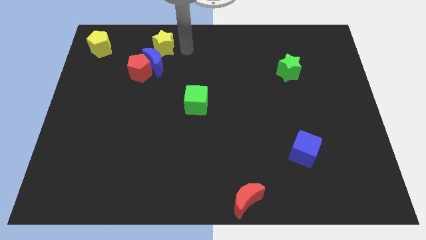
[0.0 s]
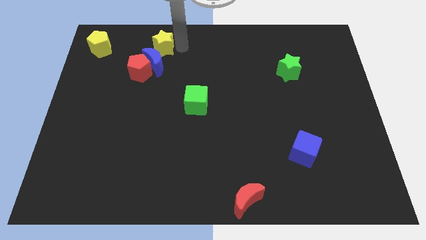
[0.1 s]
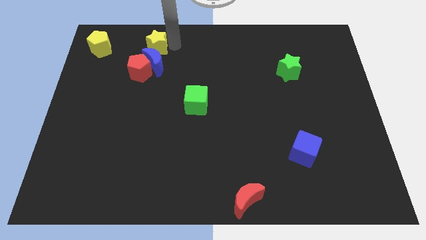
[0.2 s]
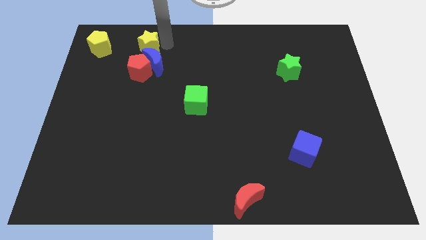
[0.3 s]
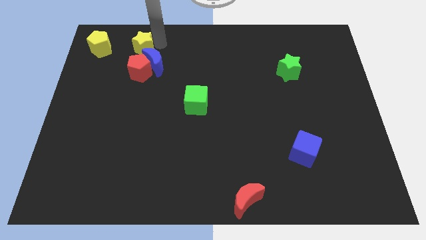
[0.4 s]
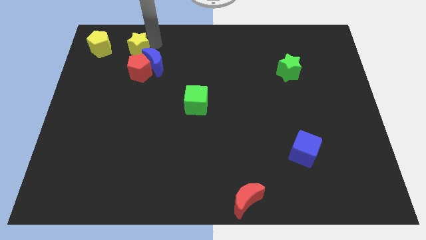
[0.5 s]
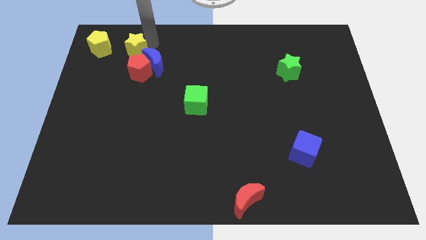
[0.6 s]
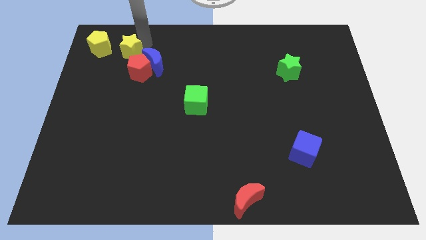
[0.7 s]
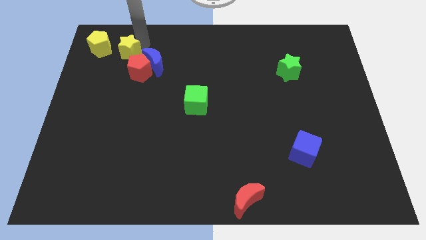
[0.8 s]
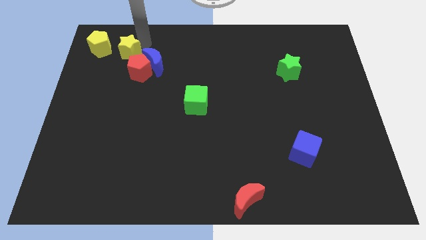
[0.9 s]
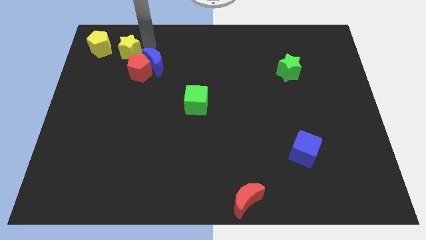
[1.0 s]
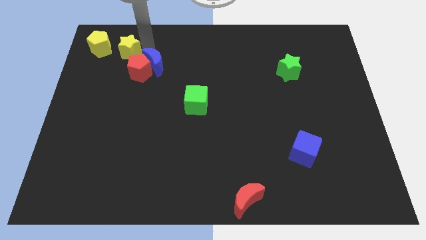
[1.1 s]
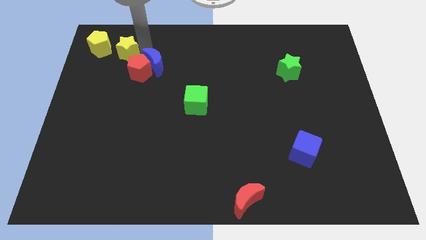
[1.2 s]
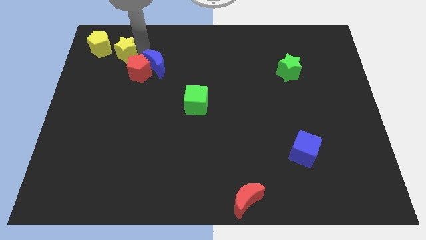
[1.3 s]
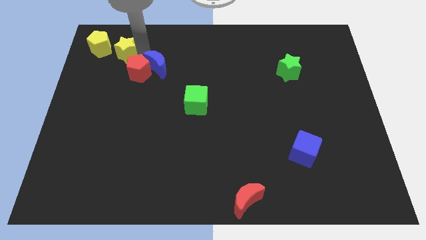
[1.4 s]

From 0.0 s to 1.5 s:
put yellow star between the yellow pentagon and blue moon

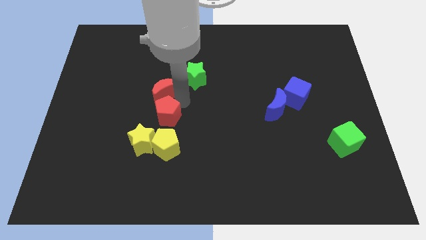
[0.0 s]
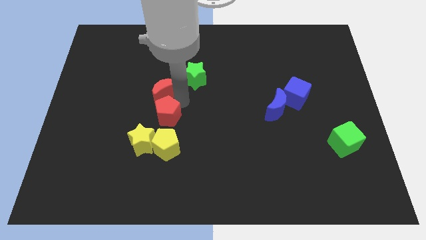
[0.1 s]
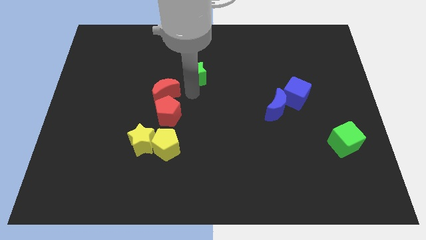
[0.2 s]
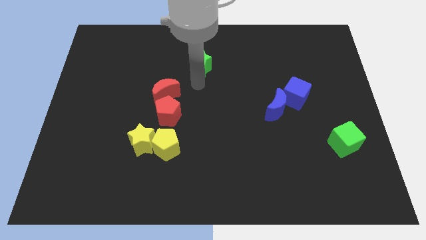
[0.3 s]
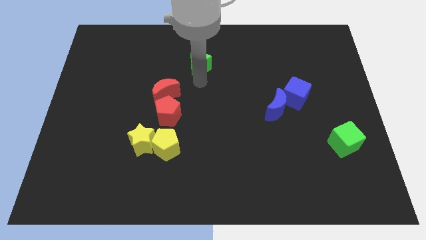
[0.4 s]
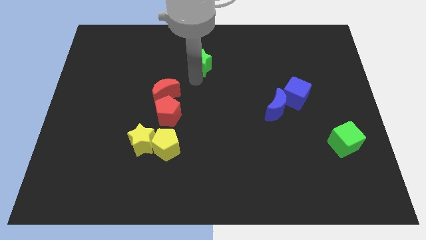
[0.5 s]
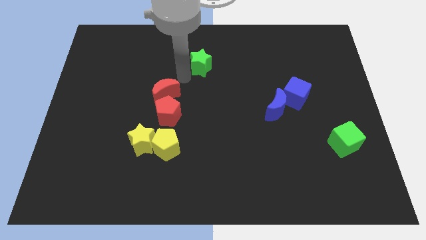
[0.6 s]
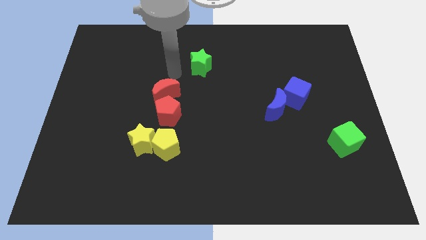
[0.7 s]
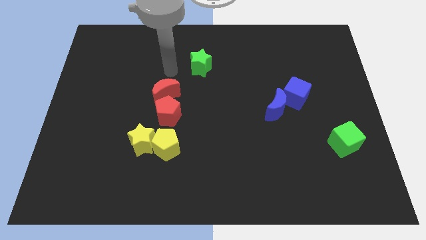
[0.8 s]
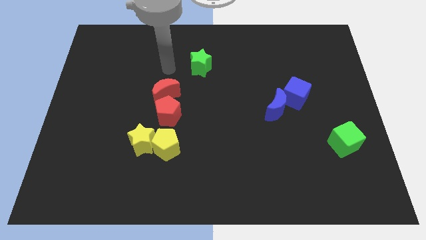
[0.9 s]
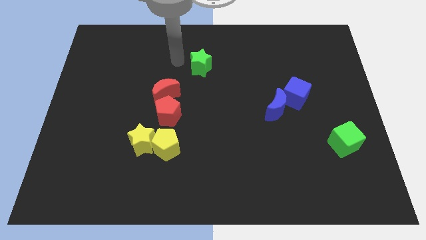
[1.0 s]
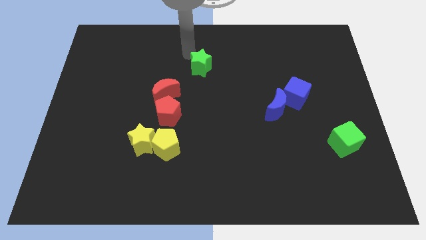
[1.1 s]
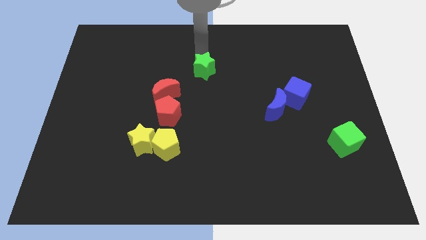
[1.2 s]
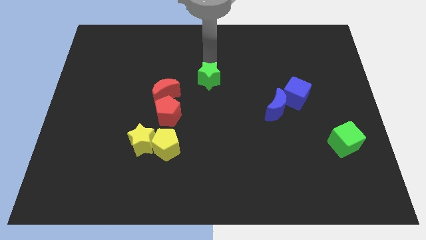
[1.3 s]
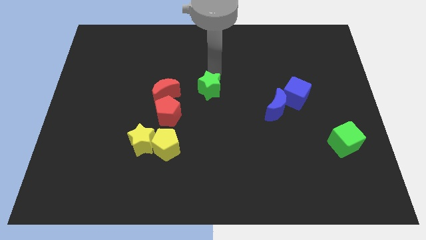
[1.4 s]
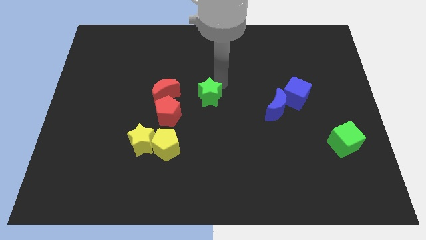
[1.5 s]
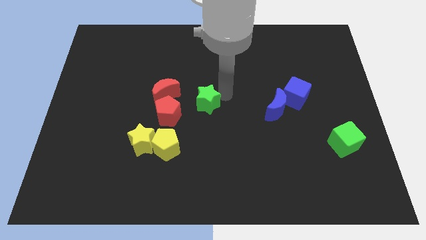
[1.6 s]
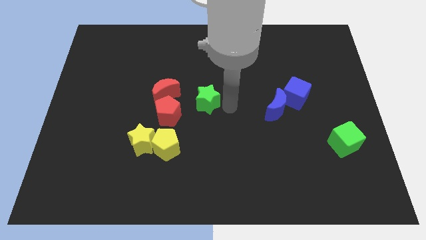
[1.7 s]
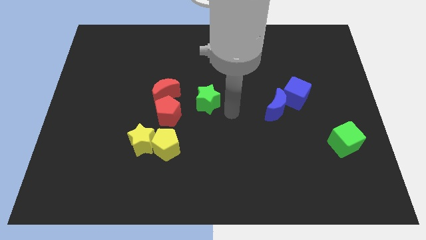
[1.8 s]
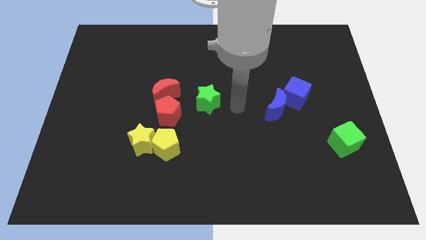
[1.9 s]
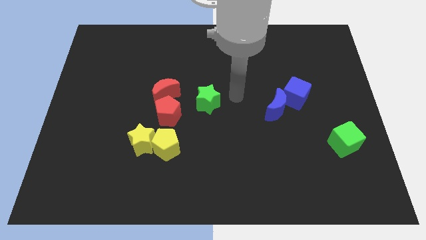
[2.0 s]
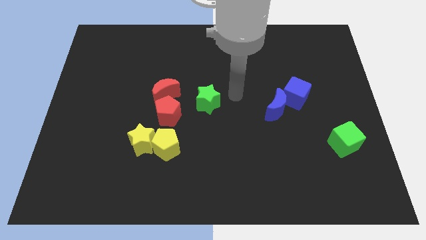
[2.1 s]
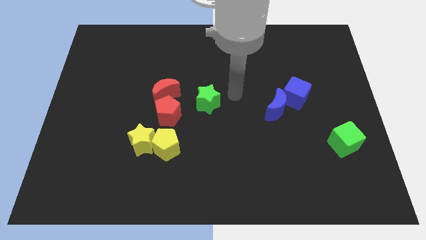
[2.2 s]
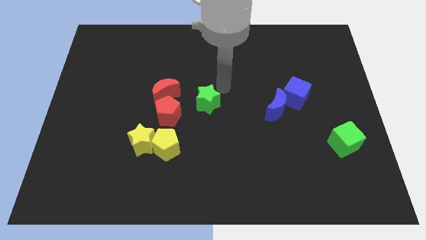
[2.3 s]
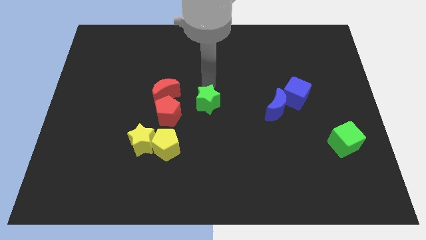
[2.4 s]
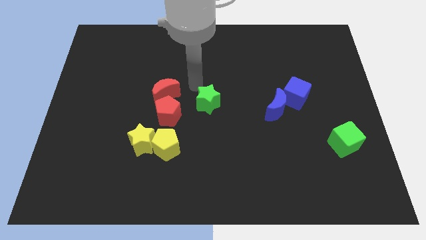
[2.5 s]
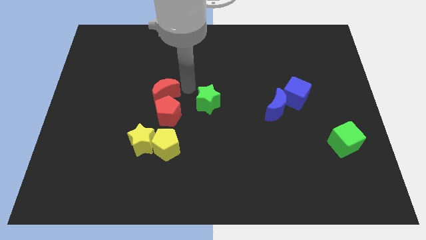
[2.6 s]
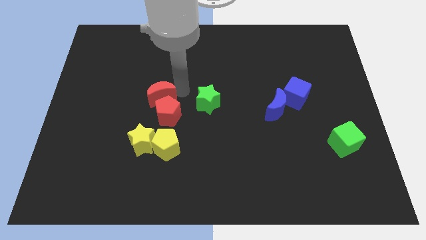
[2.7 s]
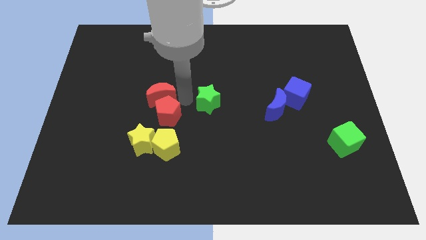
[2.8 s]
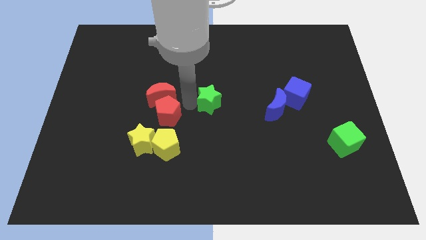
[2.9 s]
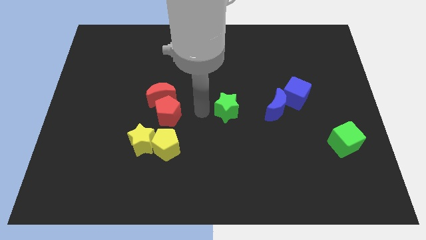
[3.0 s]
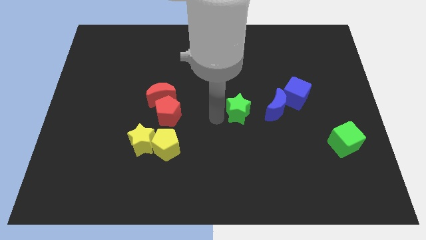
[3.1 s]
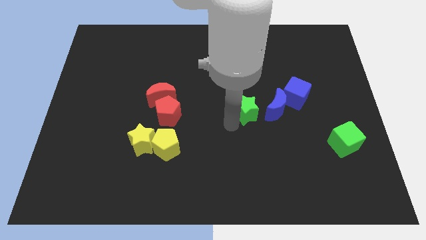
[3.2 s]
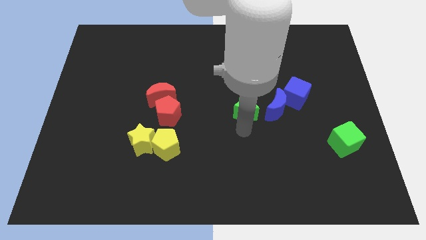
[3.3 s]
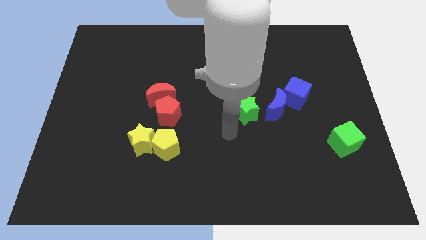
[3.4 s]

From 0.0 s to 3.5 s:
separate the green star from red crescent

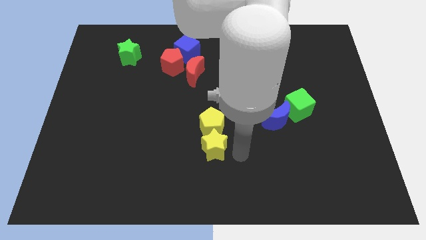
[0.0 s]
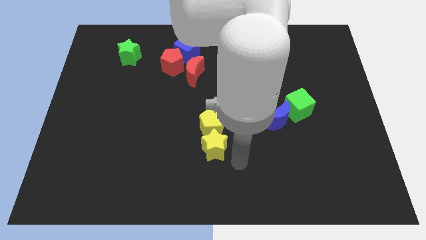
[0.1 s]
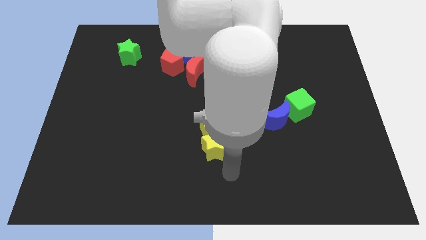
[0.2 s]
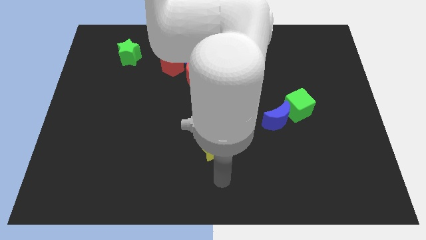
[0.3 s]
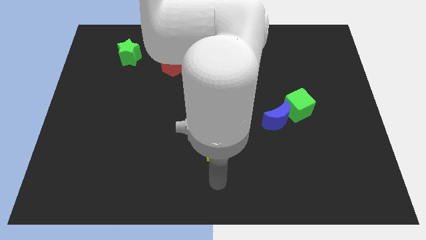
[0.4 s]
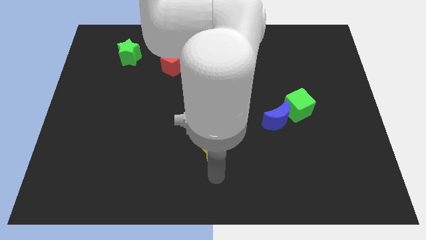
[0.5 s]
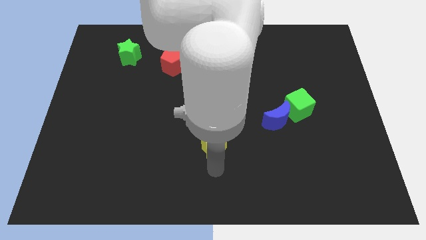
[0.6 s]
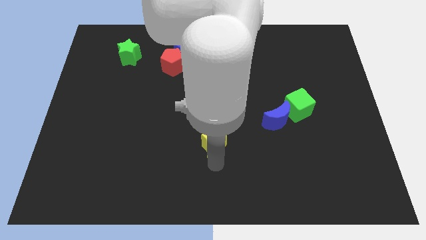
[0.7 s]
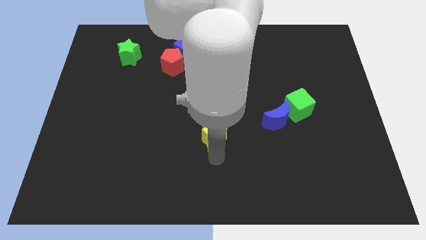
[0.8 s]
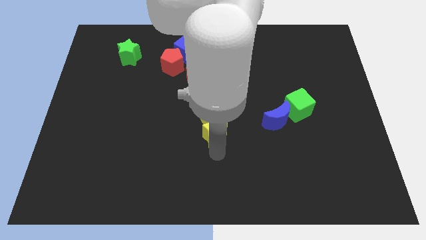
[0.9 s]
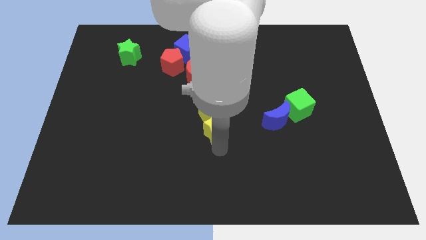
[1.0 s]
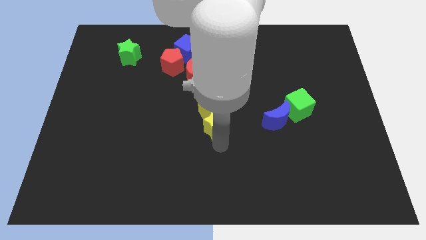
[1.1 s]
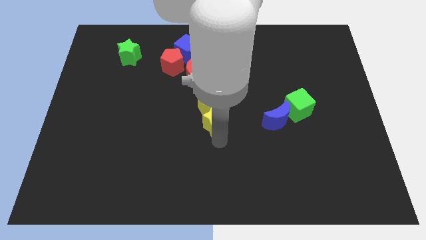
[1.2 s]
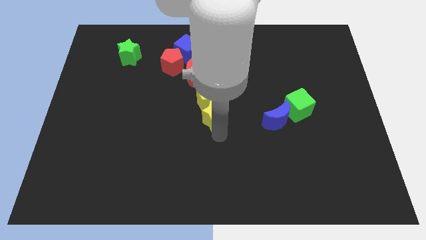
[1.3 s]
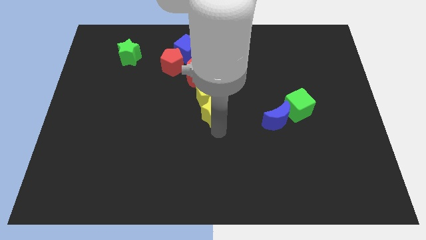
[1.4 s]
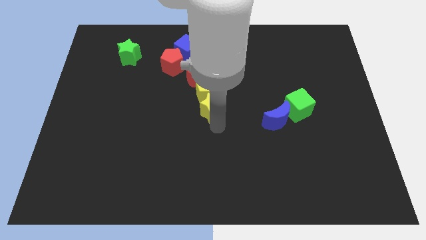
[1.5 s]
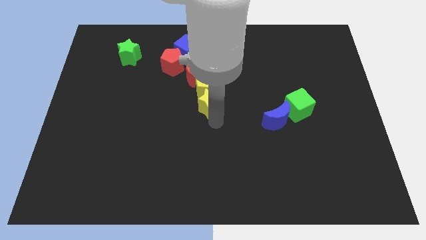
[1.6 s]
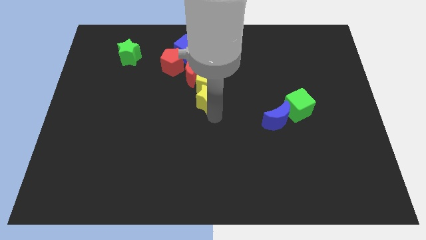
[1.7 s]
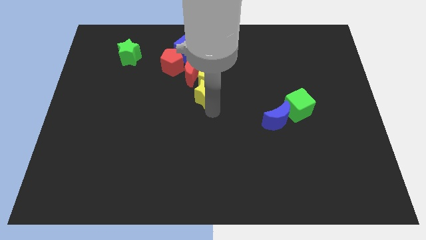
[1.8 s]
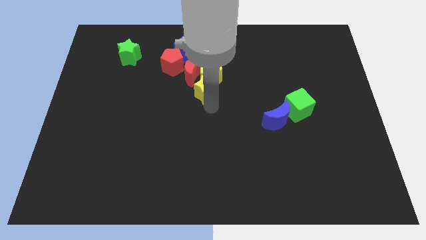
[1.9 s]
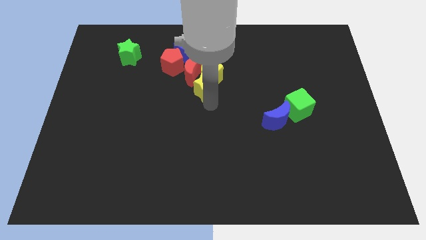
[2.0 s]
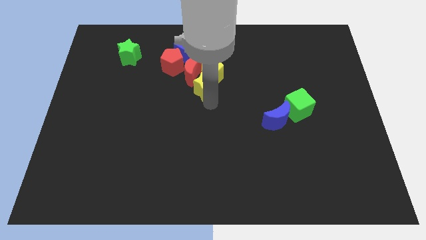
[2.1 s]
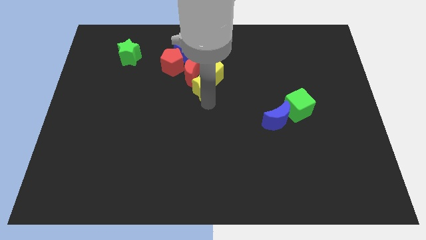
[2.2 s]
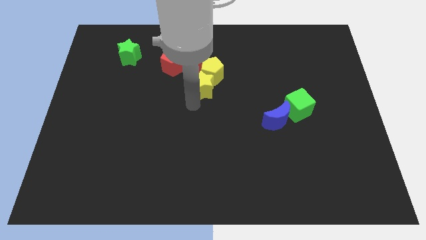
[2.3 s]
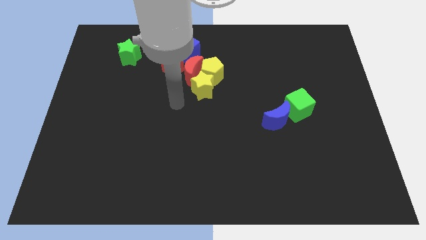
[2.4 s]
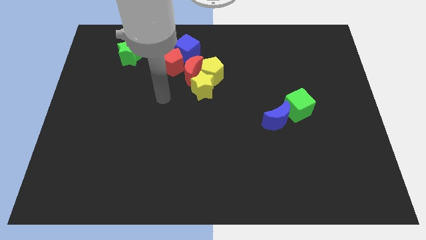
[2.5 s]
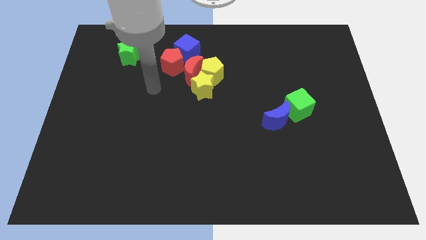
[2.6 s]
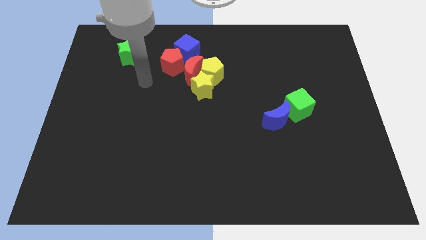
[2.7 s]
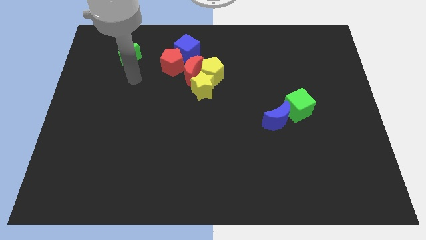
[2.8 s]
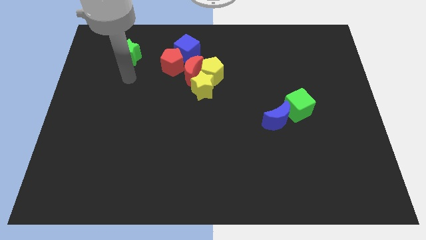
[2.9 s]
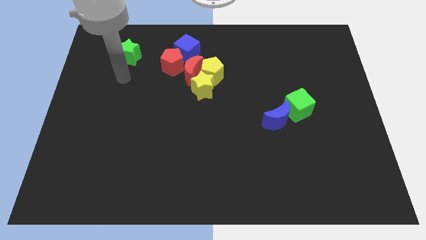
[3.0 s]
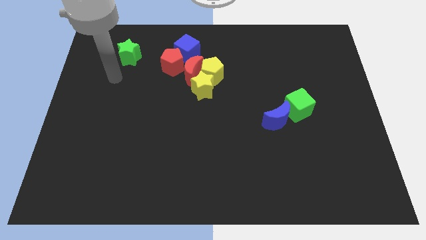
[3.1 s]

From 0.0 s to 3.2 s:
push the yellow star along with the yellow pentagon into the red moon

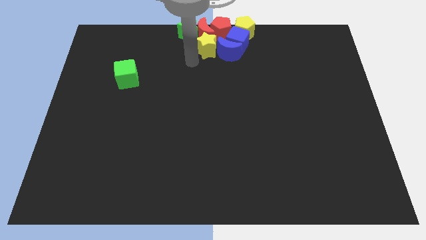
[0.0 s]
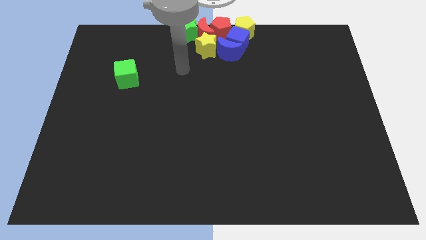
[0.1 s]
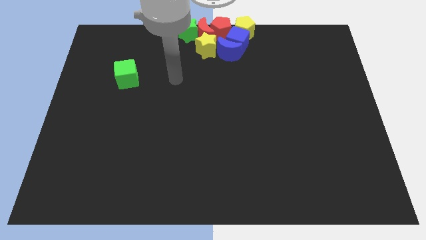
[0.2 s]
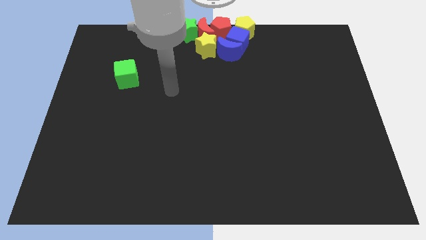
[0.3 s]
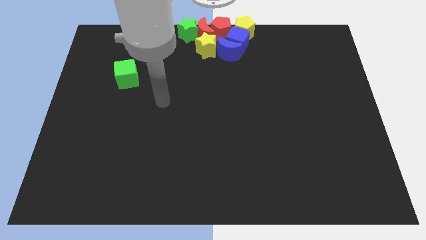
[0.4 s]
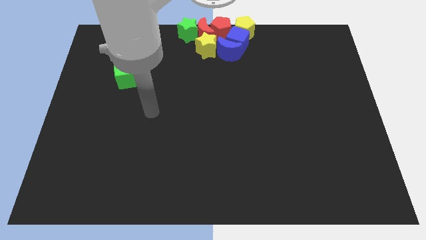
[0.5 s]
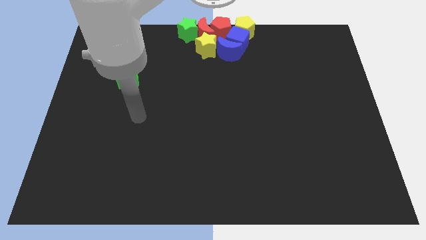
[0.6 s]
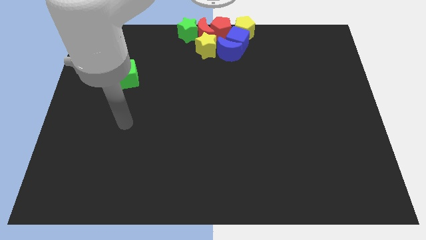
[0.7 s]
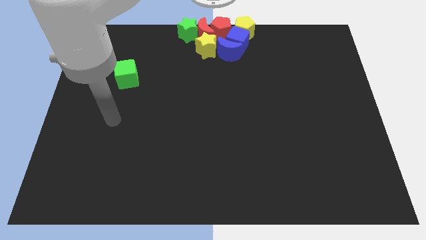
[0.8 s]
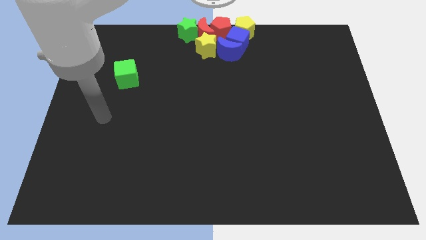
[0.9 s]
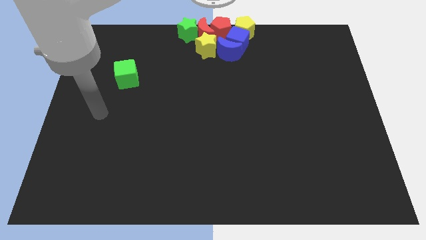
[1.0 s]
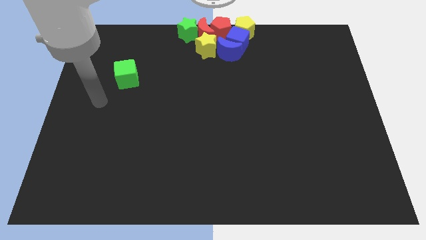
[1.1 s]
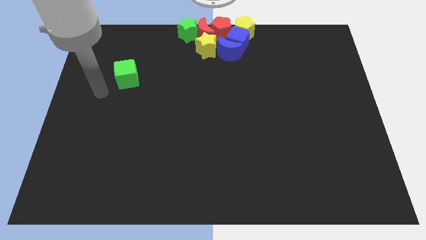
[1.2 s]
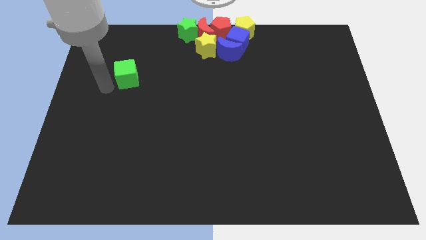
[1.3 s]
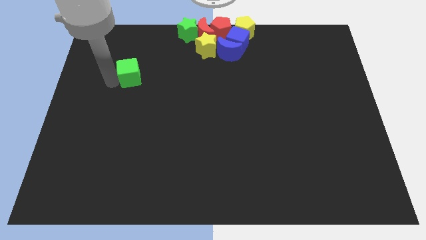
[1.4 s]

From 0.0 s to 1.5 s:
place your arm parallel left to the green cube
